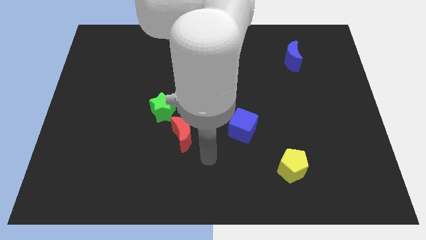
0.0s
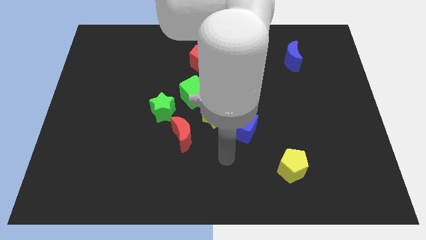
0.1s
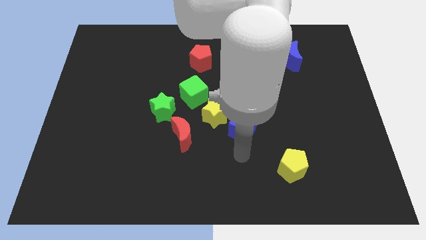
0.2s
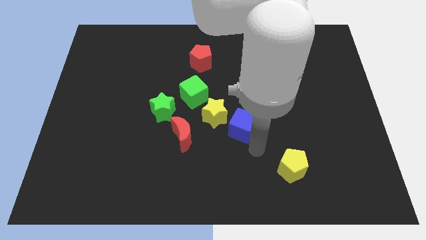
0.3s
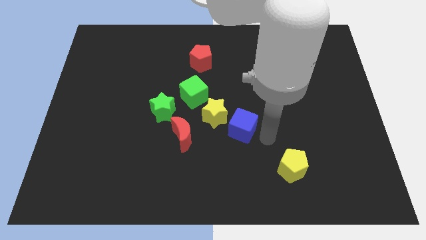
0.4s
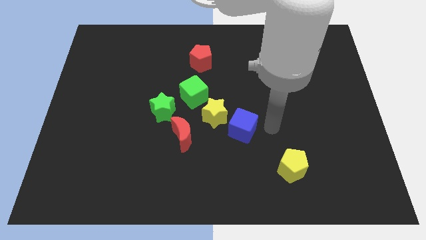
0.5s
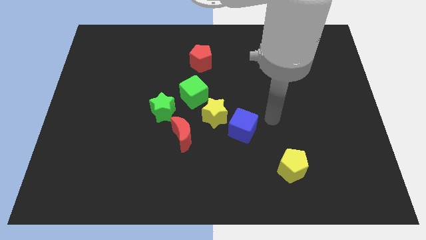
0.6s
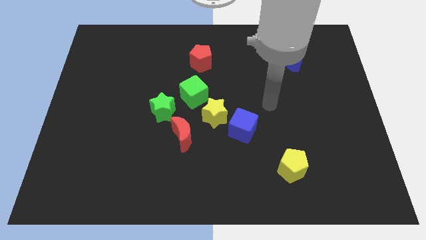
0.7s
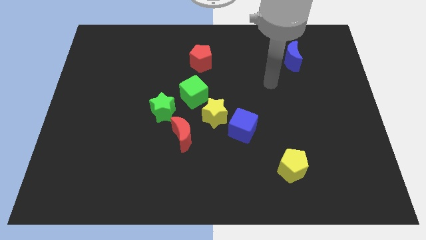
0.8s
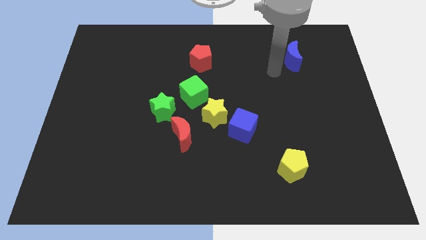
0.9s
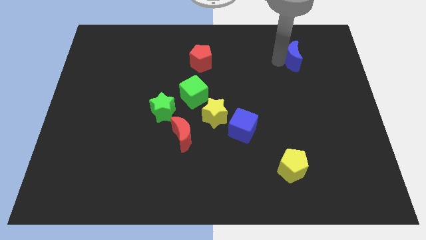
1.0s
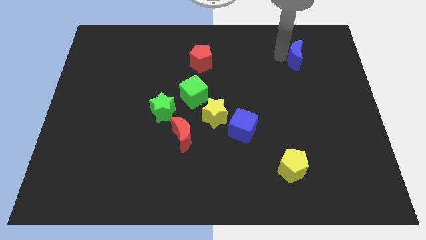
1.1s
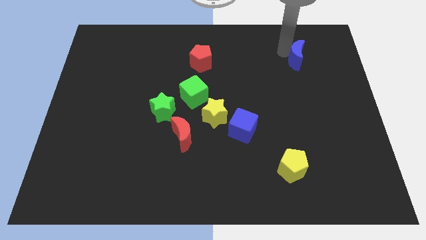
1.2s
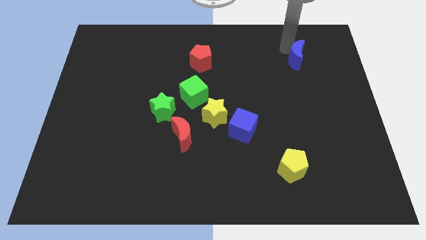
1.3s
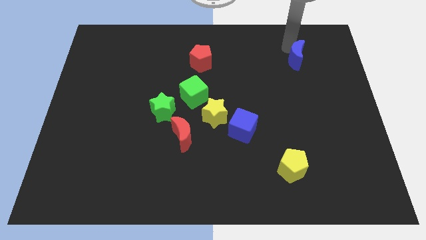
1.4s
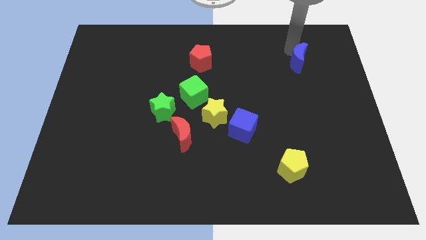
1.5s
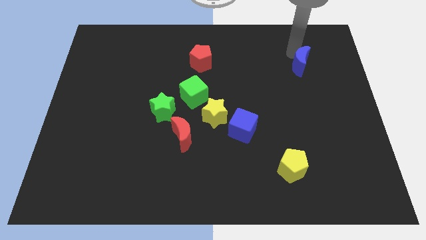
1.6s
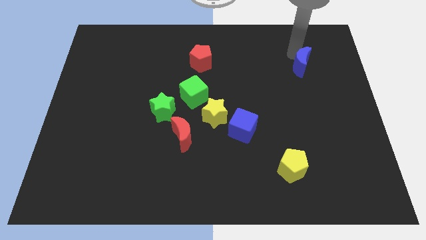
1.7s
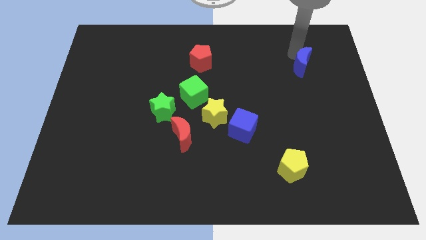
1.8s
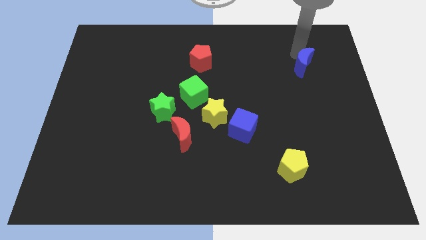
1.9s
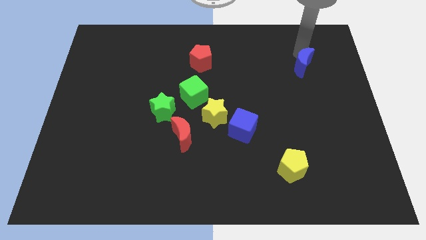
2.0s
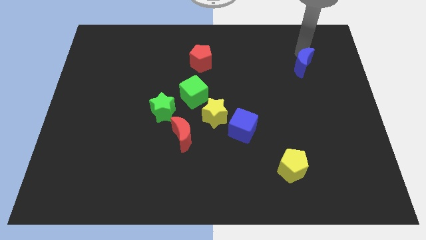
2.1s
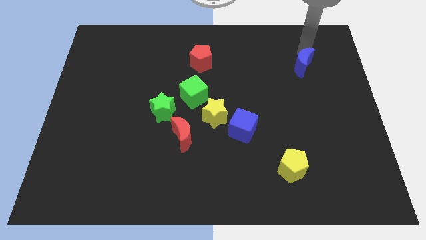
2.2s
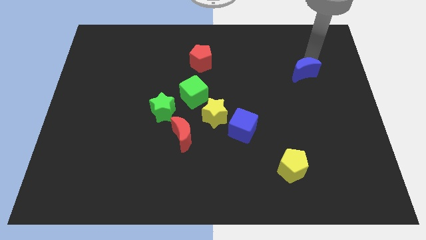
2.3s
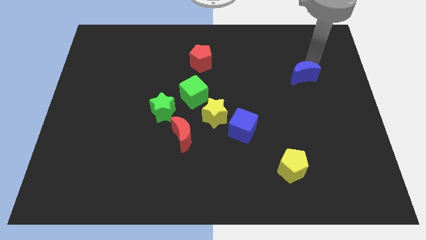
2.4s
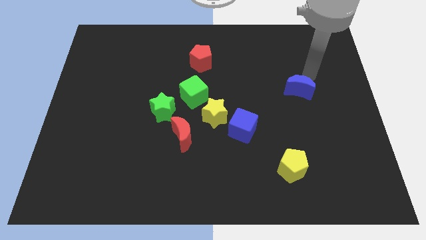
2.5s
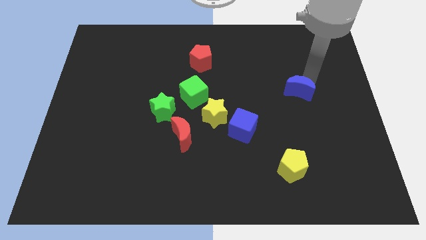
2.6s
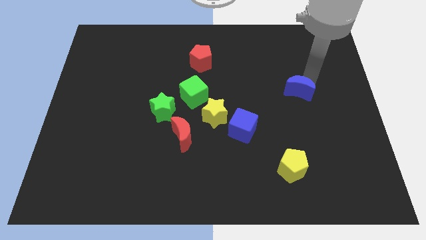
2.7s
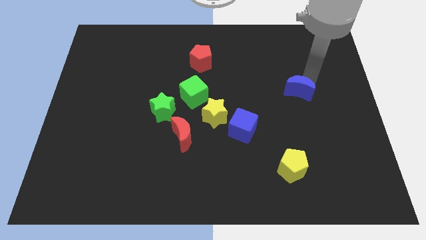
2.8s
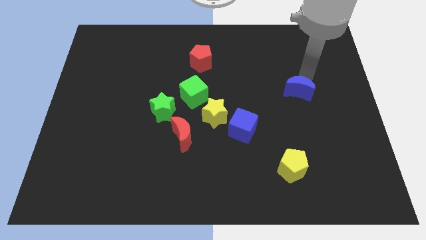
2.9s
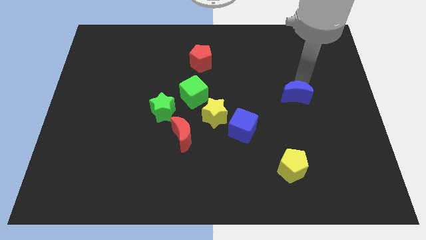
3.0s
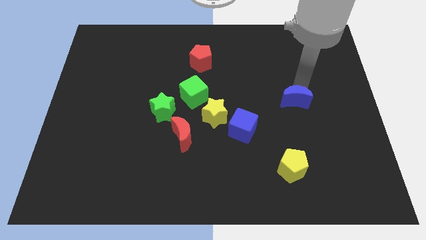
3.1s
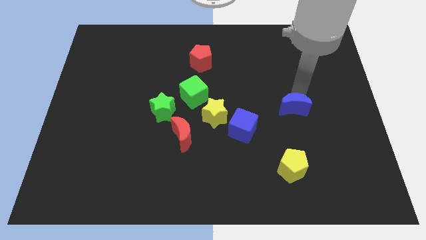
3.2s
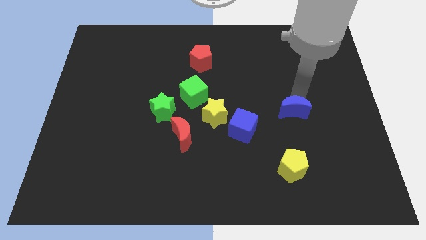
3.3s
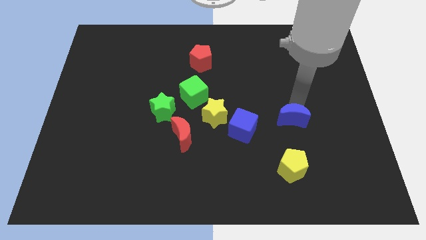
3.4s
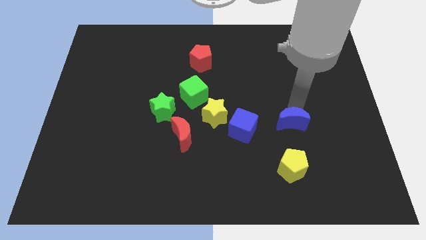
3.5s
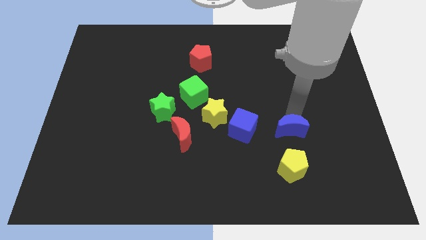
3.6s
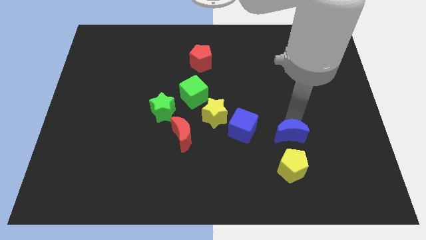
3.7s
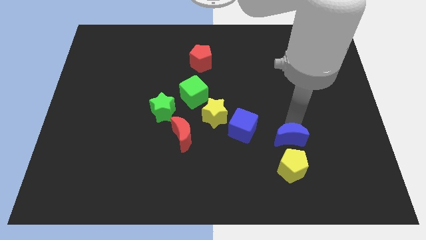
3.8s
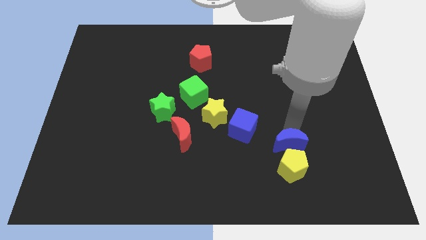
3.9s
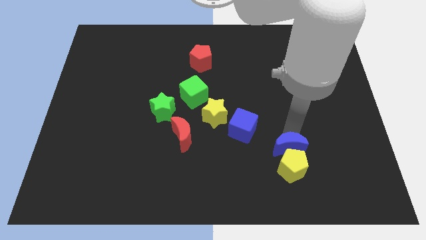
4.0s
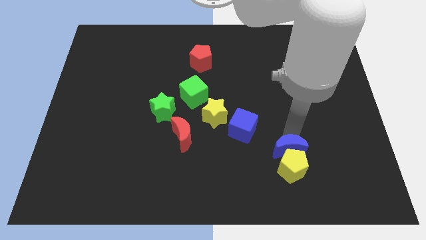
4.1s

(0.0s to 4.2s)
slide the blue moon towards the yellow pentagon

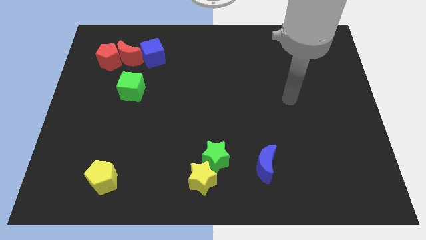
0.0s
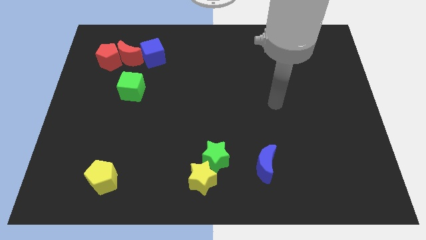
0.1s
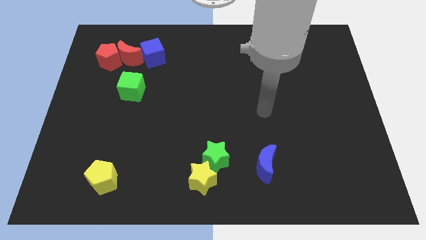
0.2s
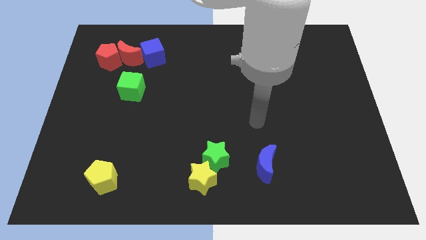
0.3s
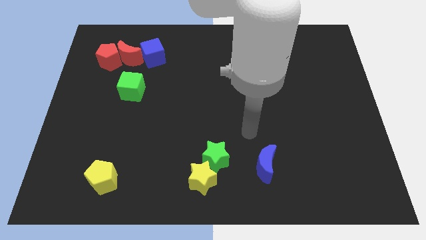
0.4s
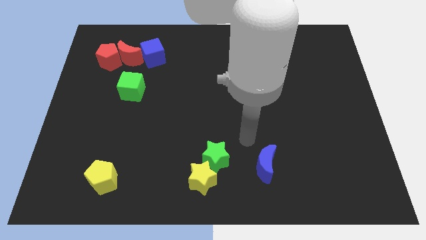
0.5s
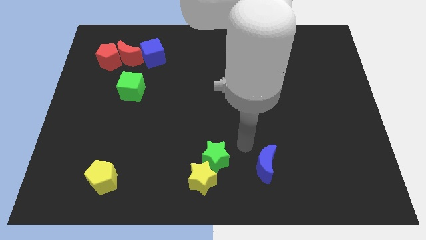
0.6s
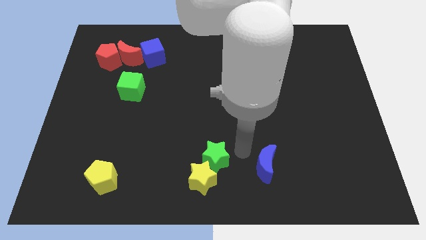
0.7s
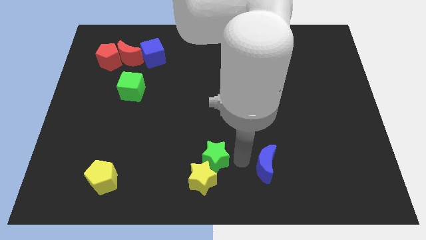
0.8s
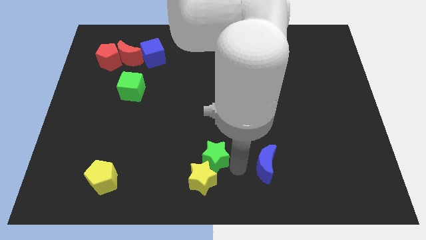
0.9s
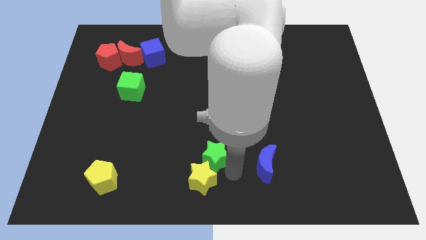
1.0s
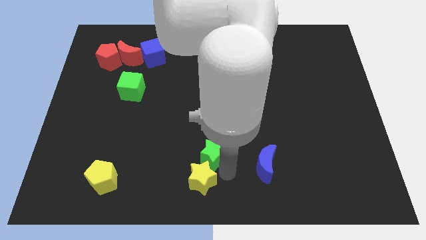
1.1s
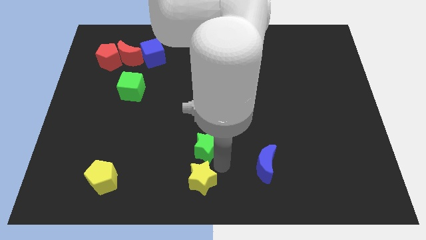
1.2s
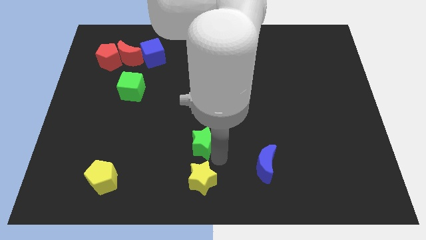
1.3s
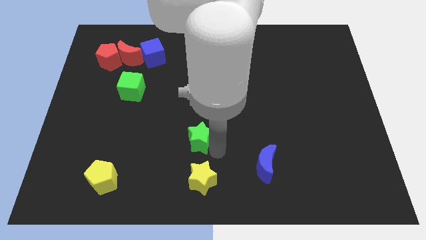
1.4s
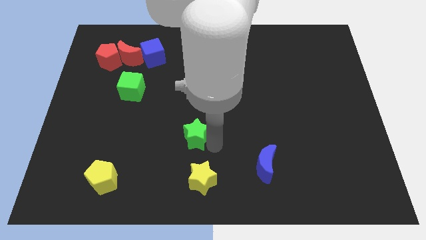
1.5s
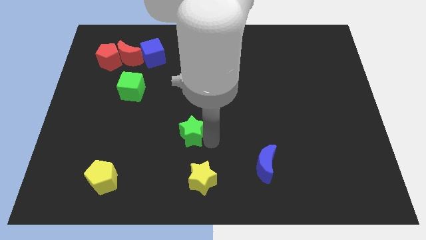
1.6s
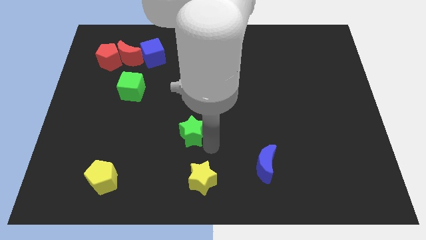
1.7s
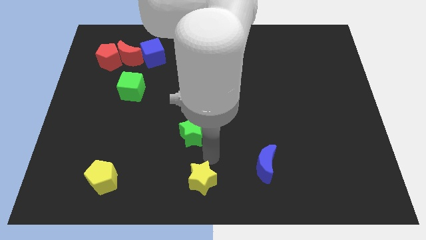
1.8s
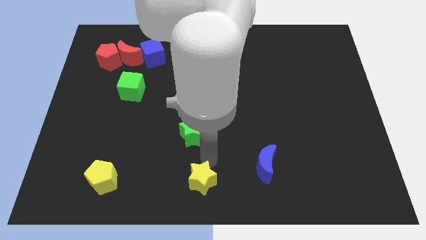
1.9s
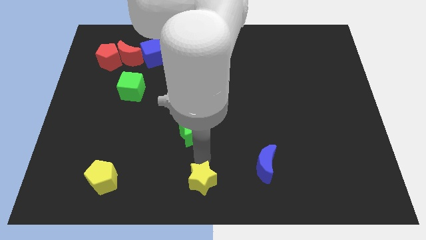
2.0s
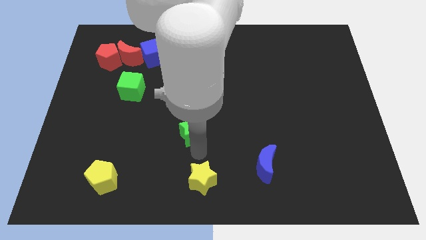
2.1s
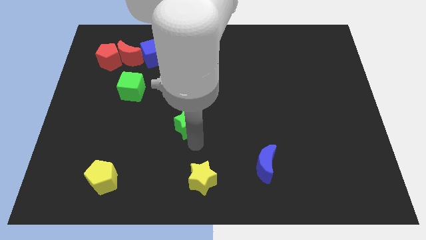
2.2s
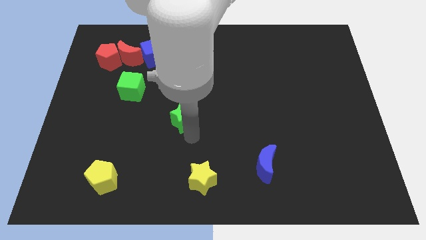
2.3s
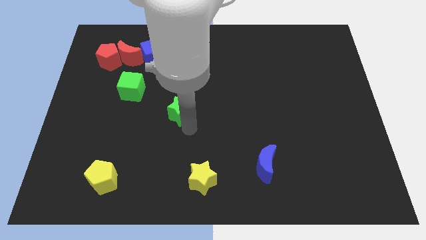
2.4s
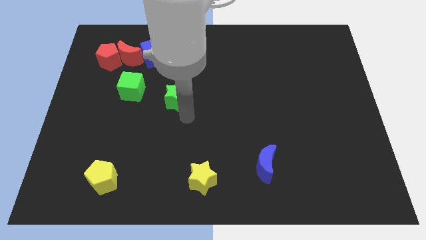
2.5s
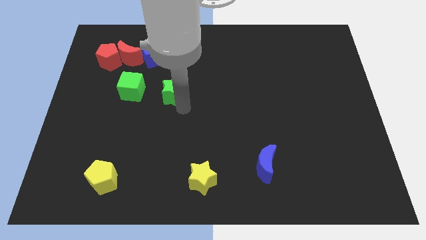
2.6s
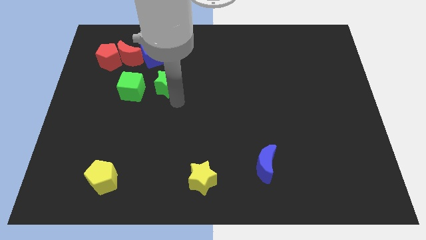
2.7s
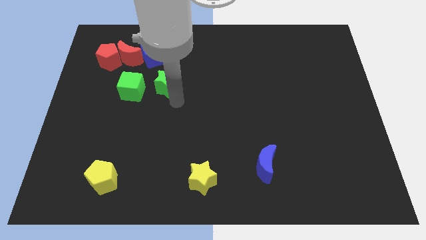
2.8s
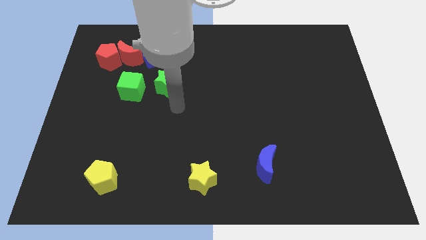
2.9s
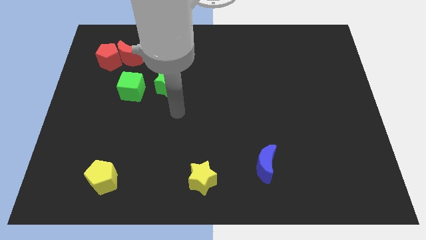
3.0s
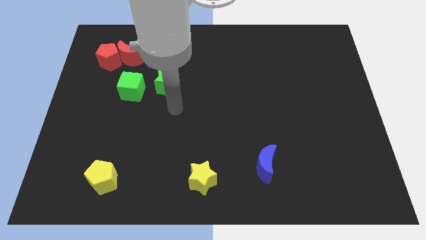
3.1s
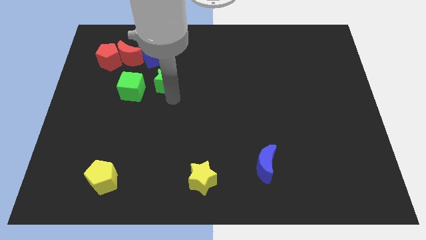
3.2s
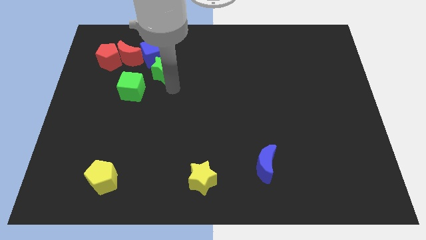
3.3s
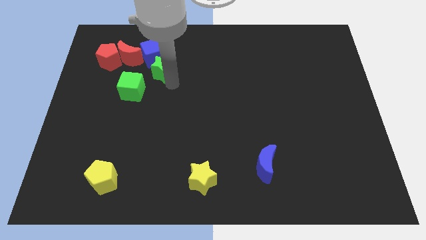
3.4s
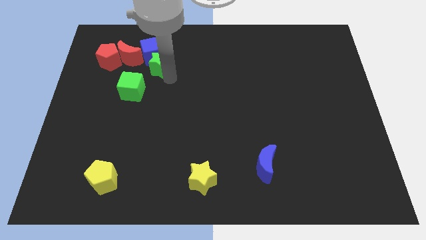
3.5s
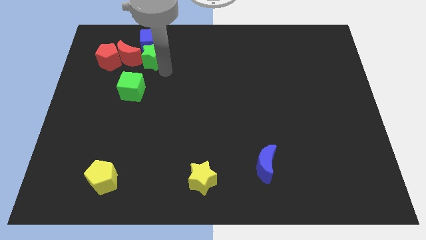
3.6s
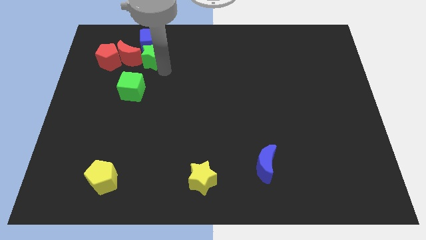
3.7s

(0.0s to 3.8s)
move the green star to the blue cube

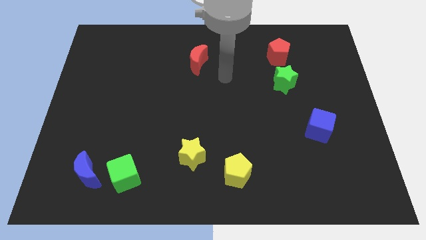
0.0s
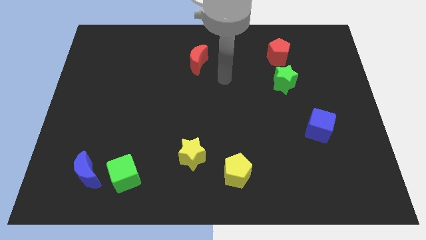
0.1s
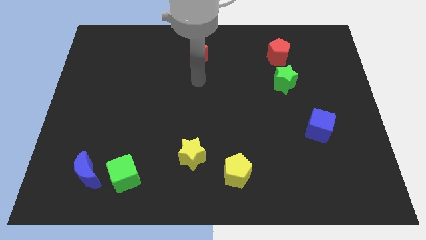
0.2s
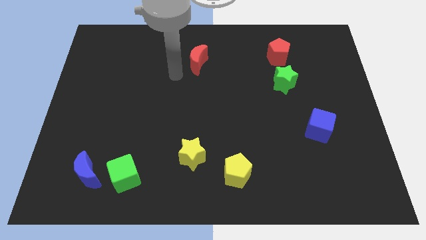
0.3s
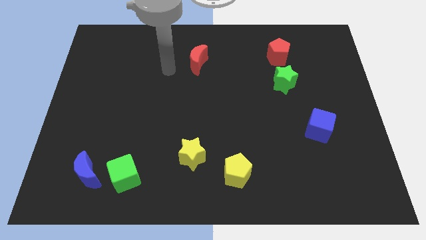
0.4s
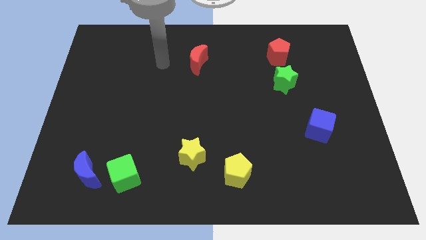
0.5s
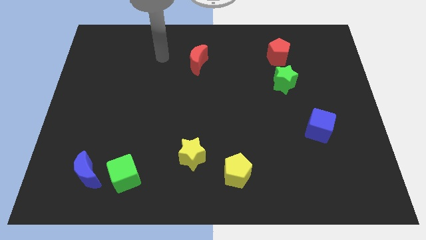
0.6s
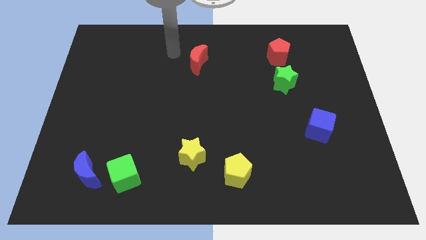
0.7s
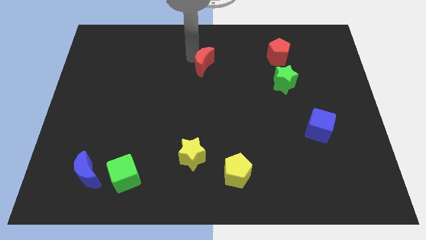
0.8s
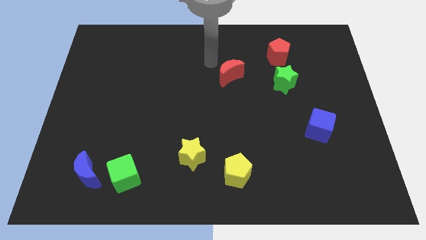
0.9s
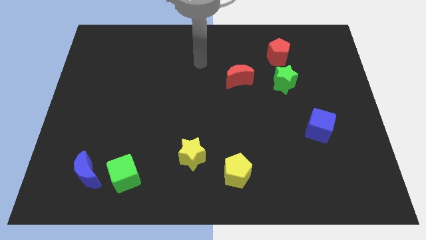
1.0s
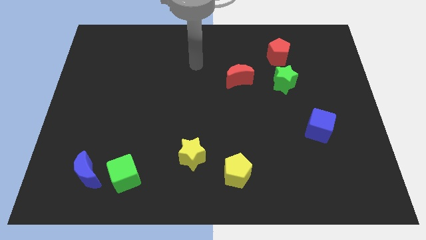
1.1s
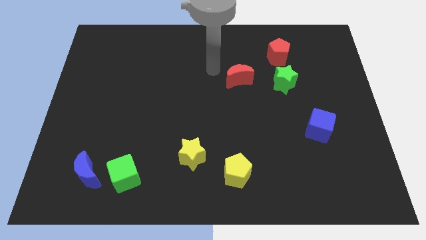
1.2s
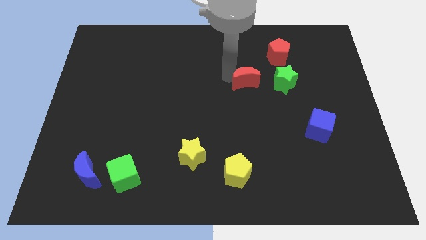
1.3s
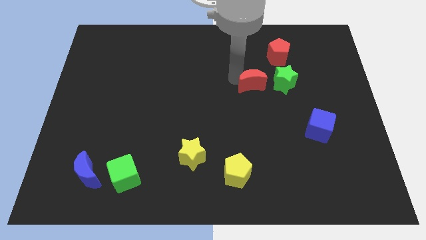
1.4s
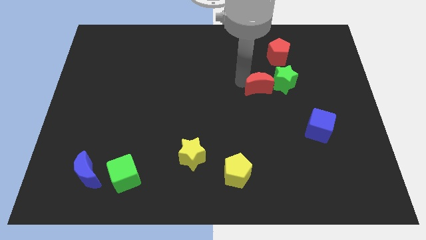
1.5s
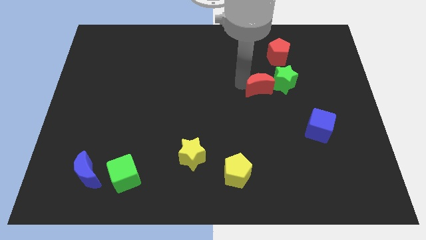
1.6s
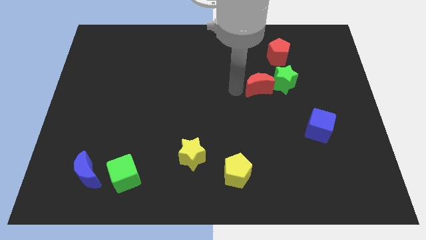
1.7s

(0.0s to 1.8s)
move the red moon to the green star
